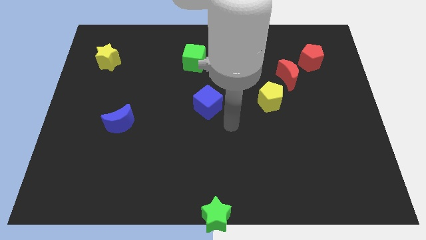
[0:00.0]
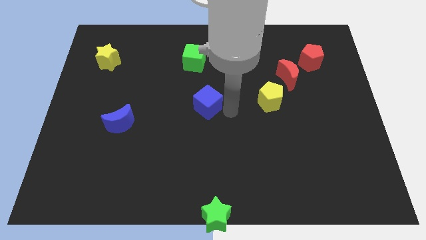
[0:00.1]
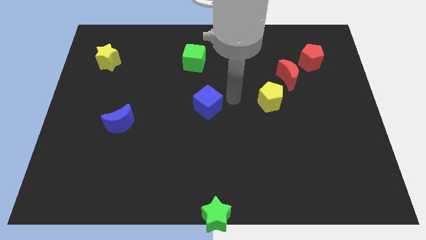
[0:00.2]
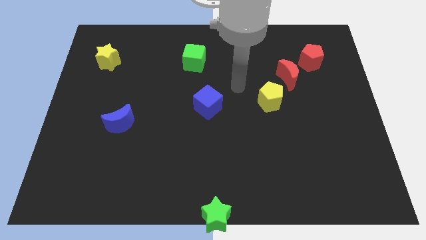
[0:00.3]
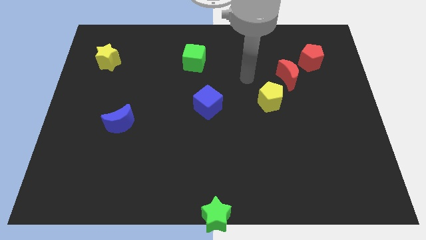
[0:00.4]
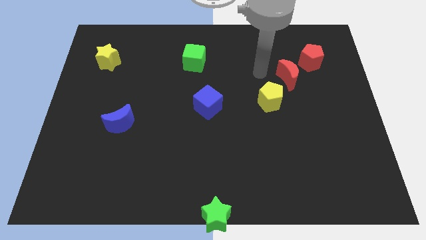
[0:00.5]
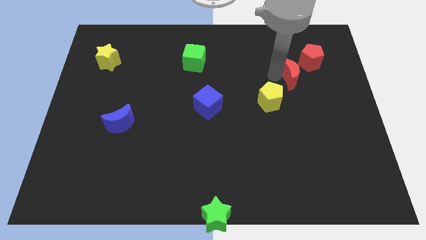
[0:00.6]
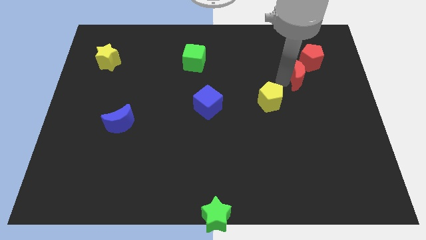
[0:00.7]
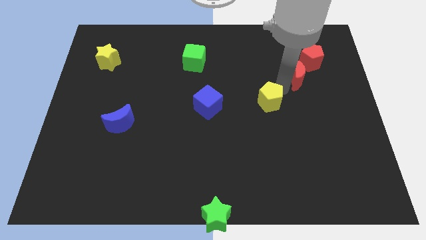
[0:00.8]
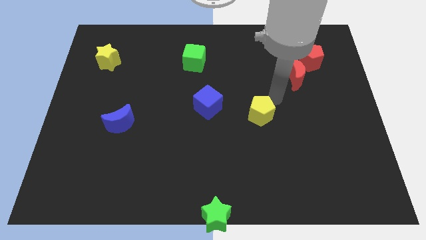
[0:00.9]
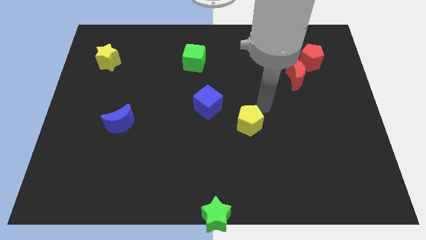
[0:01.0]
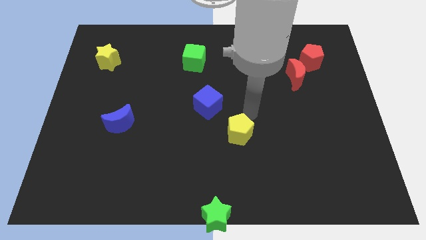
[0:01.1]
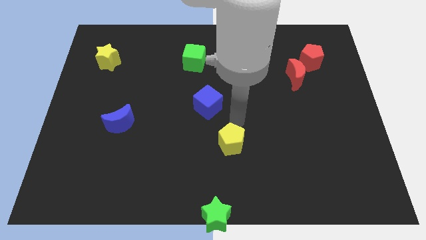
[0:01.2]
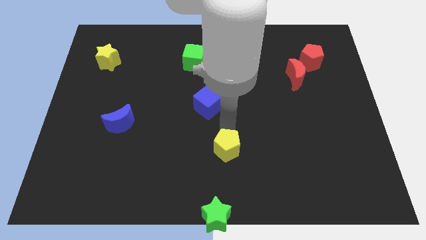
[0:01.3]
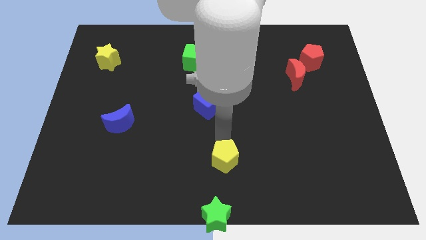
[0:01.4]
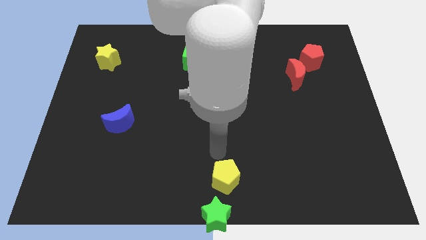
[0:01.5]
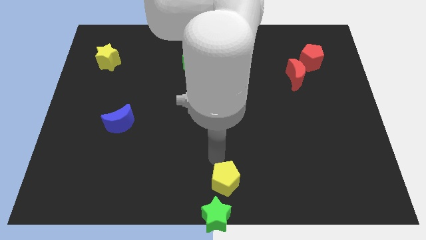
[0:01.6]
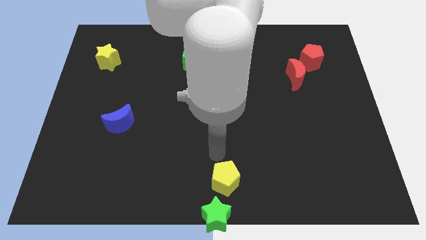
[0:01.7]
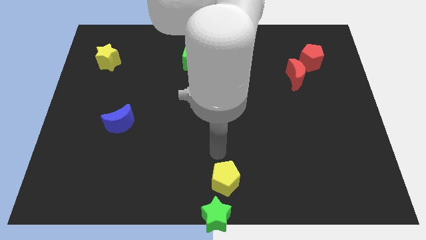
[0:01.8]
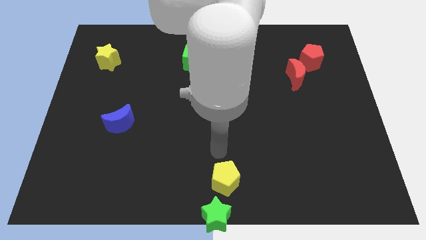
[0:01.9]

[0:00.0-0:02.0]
place the yellow pentagon on top of the green star

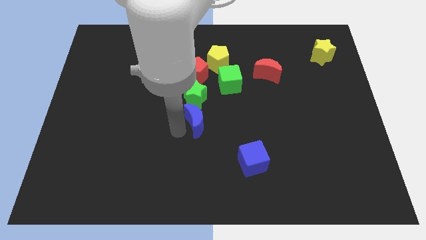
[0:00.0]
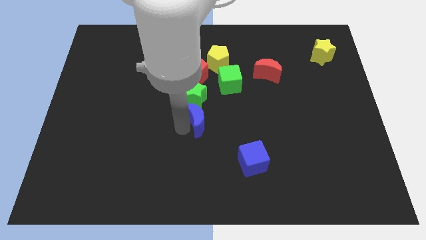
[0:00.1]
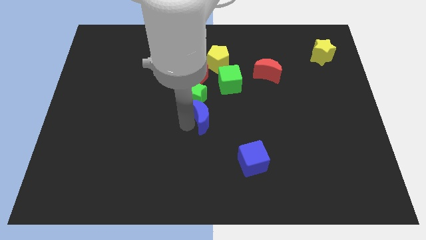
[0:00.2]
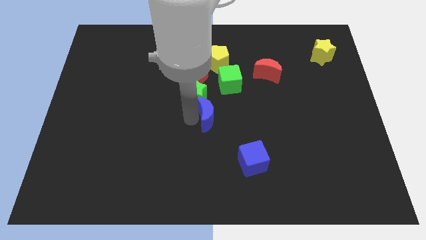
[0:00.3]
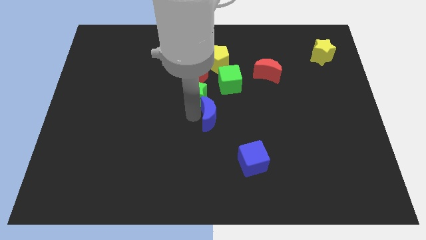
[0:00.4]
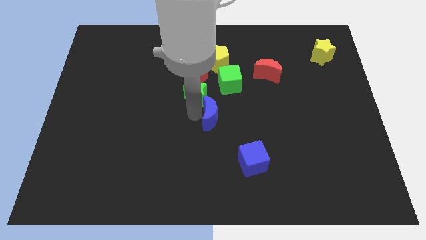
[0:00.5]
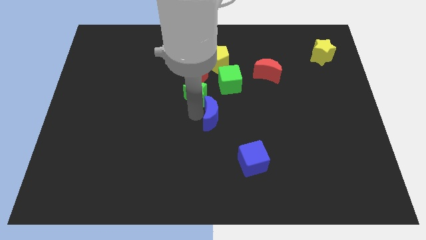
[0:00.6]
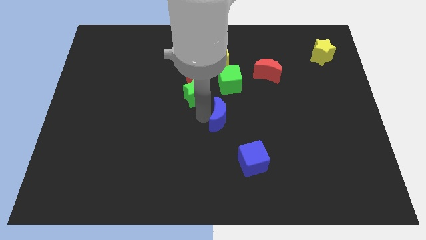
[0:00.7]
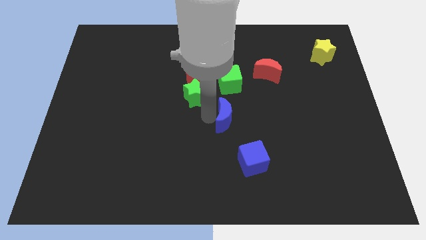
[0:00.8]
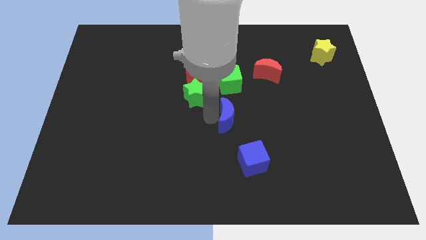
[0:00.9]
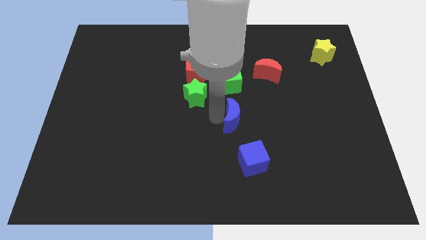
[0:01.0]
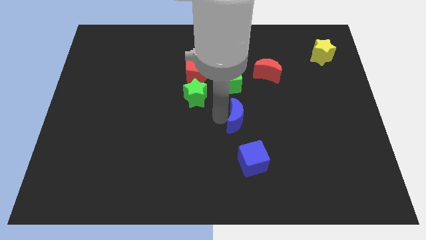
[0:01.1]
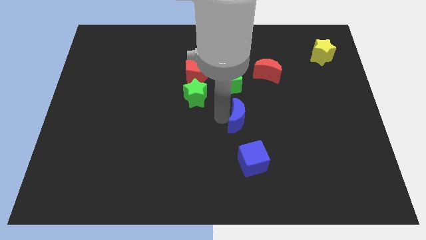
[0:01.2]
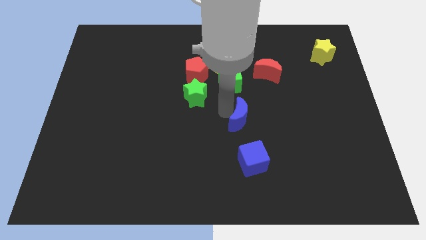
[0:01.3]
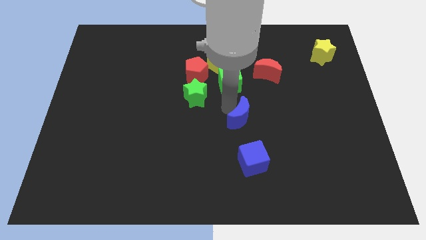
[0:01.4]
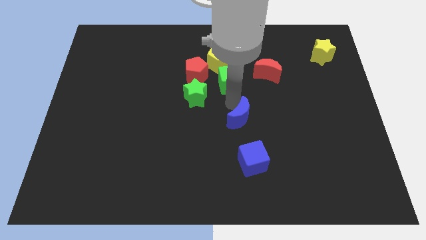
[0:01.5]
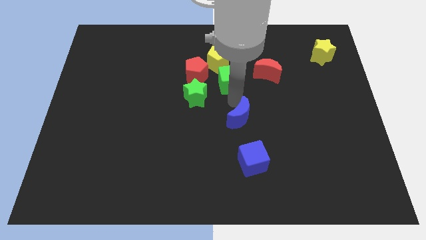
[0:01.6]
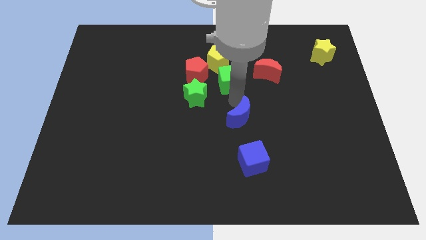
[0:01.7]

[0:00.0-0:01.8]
put the blue moon in between the green cube and blue cube

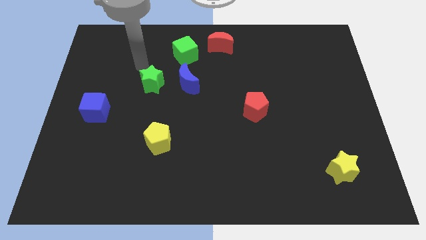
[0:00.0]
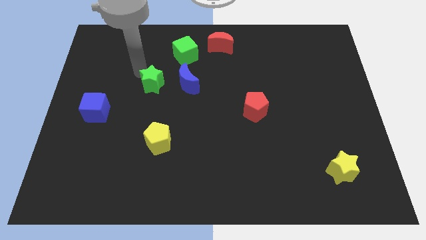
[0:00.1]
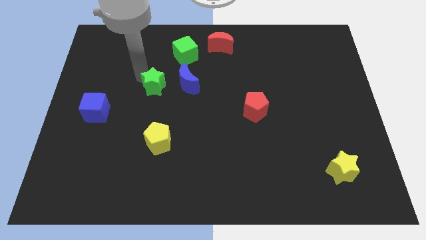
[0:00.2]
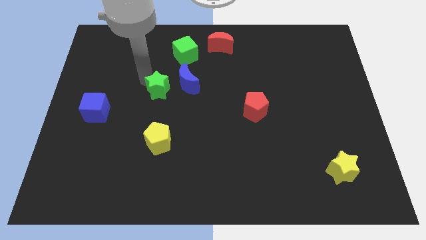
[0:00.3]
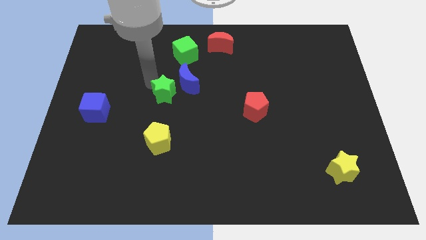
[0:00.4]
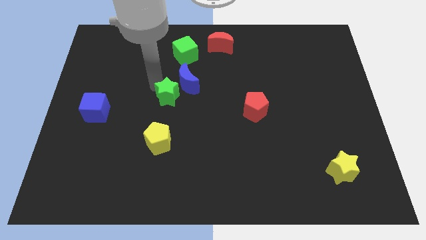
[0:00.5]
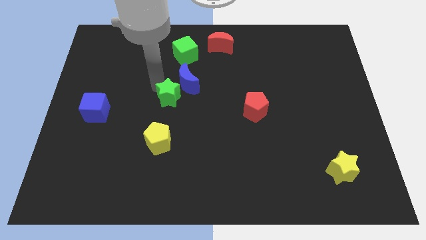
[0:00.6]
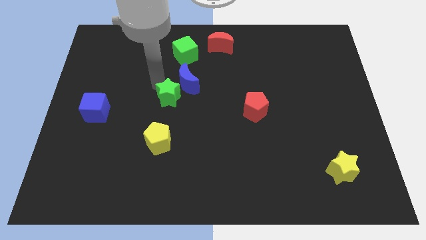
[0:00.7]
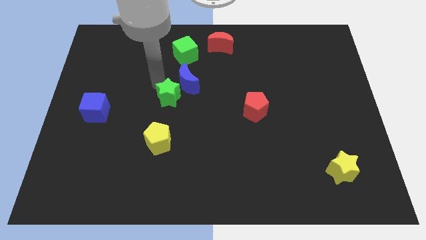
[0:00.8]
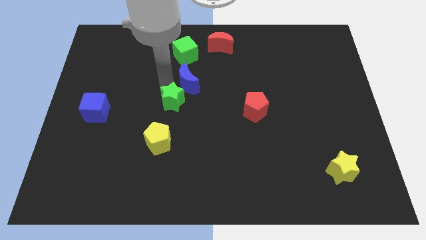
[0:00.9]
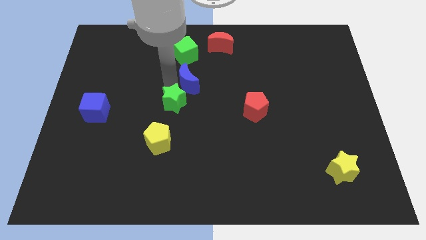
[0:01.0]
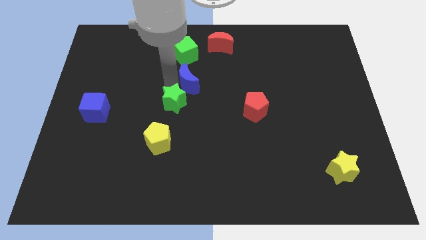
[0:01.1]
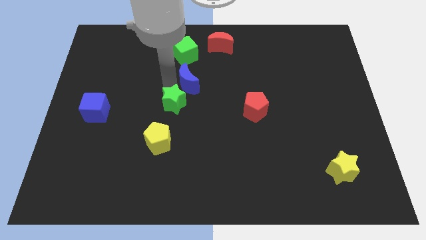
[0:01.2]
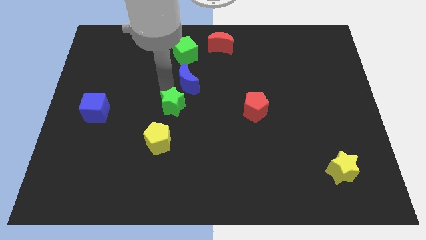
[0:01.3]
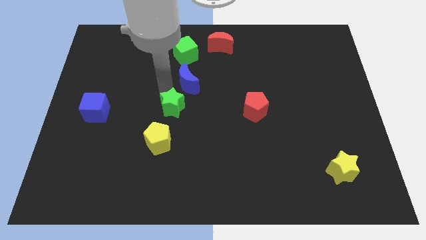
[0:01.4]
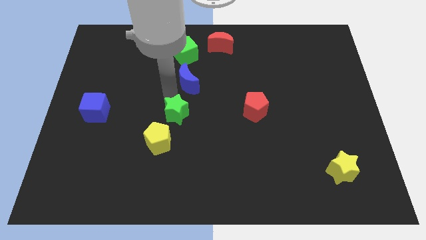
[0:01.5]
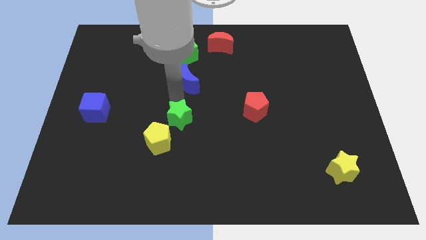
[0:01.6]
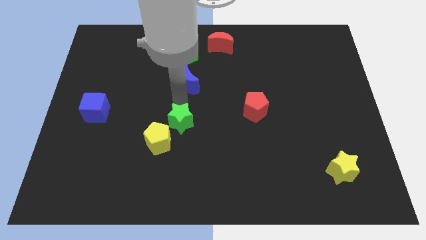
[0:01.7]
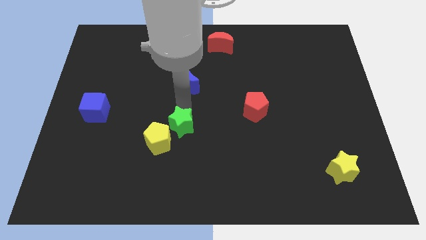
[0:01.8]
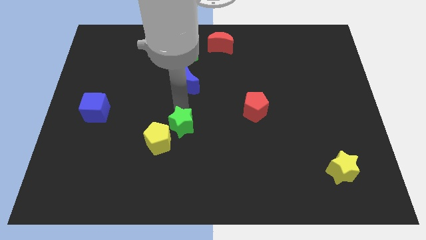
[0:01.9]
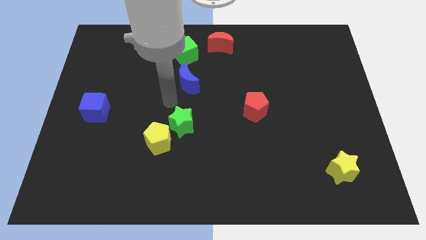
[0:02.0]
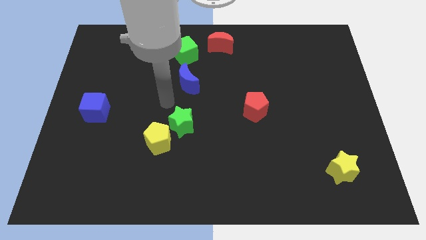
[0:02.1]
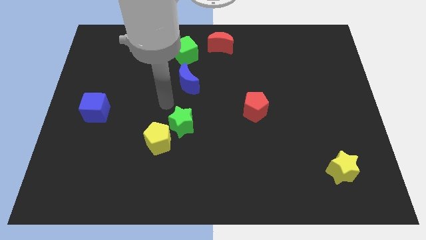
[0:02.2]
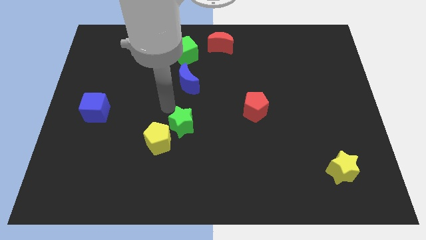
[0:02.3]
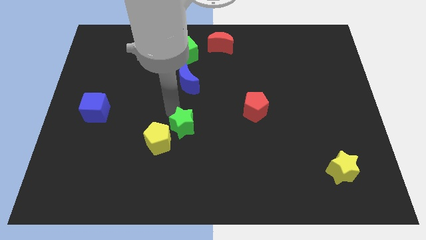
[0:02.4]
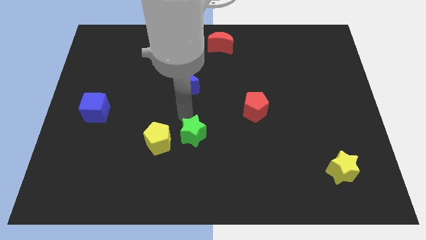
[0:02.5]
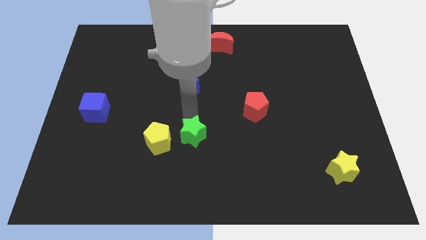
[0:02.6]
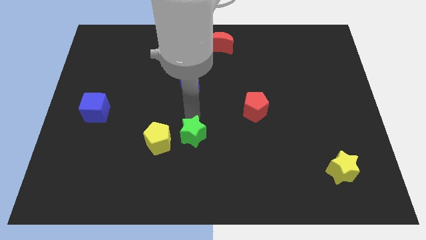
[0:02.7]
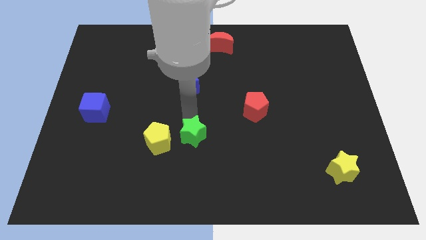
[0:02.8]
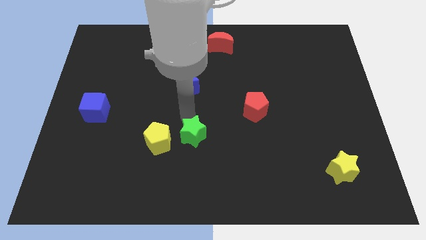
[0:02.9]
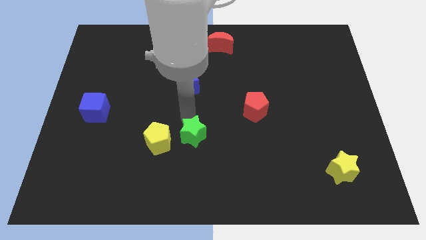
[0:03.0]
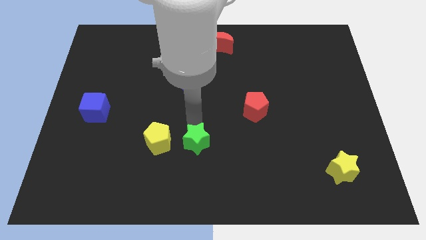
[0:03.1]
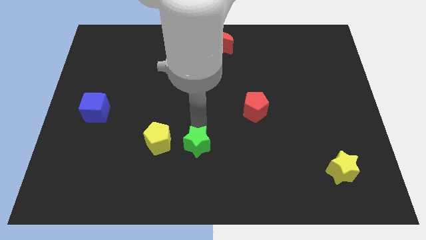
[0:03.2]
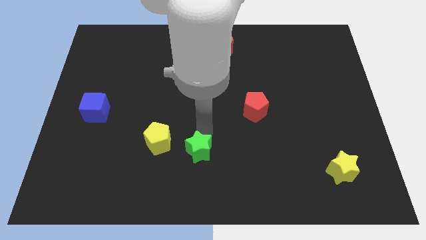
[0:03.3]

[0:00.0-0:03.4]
push the green star to the bottom right to the yellow pentagon

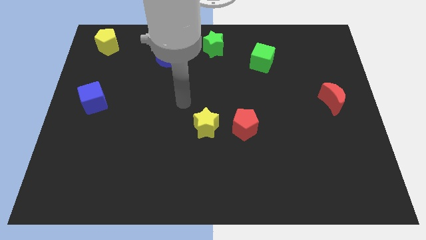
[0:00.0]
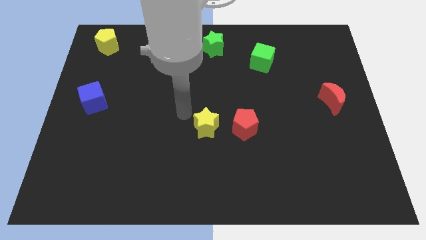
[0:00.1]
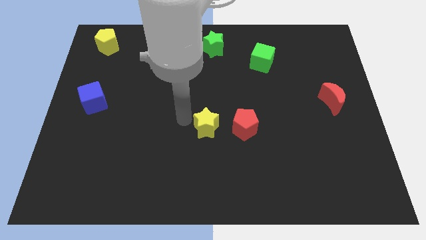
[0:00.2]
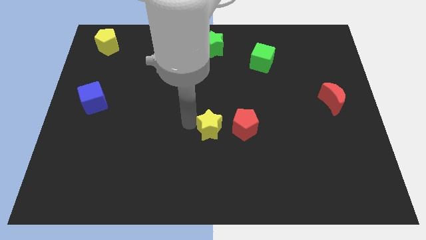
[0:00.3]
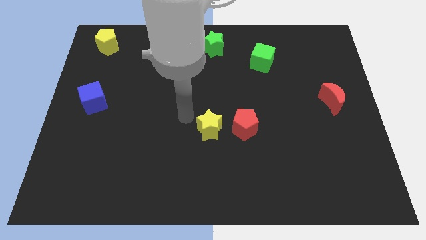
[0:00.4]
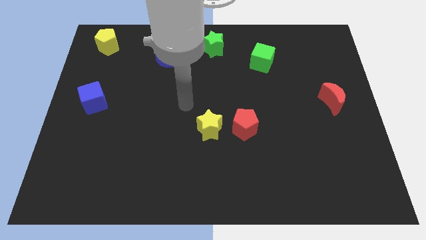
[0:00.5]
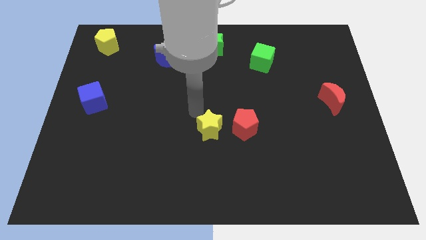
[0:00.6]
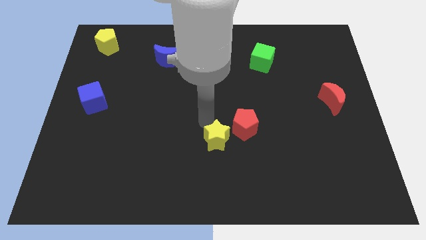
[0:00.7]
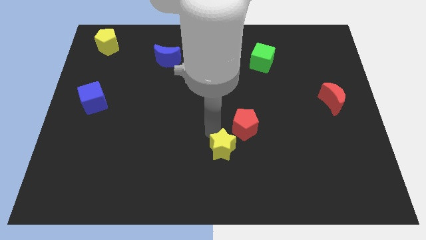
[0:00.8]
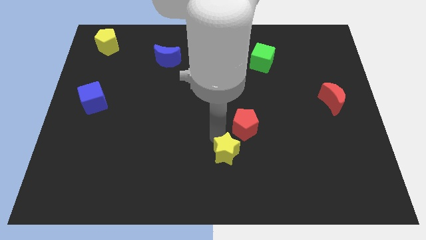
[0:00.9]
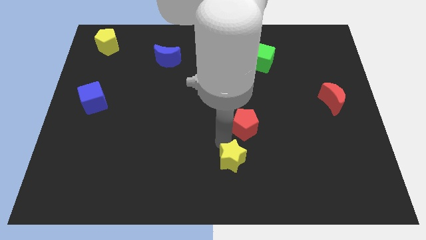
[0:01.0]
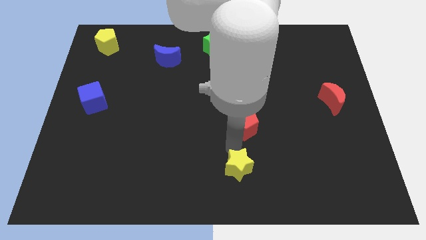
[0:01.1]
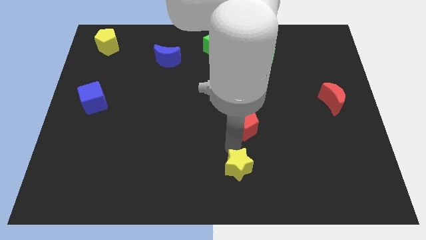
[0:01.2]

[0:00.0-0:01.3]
slide the yellow star to the bottom side of the red pentagon

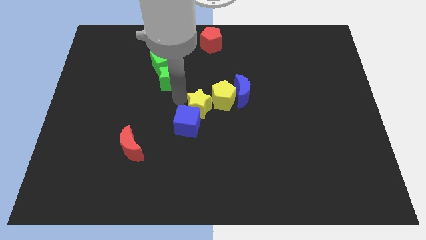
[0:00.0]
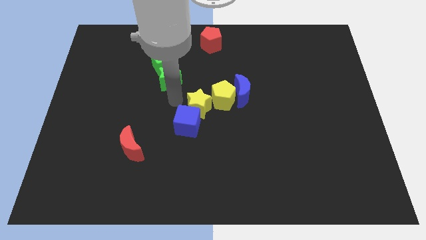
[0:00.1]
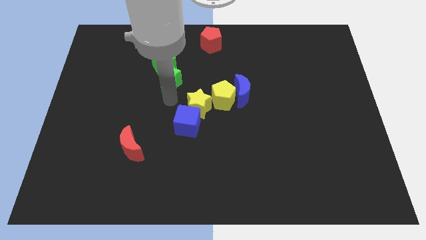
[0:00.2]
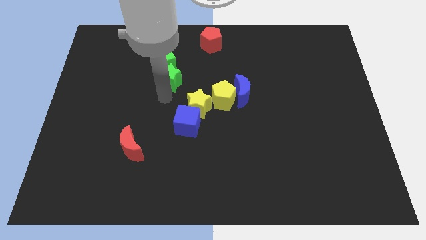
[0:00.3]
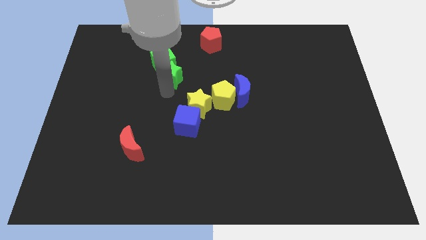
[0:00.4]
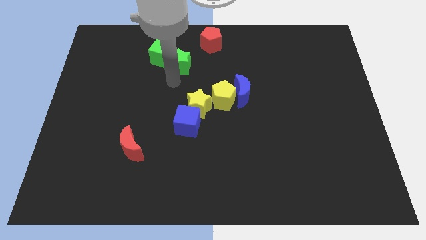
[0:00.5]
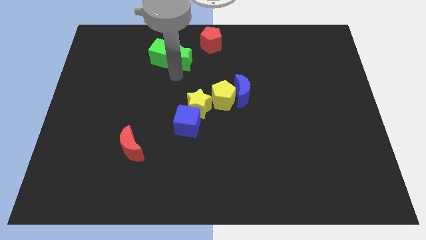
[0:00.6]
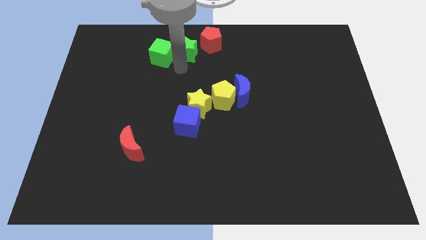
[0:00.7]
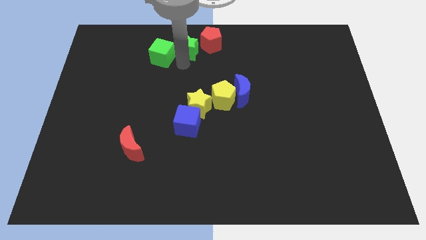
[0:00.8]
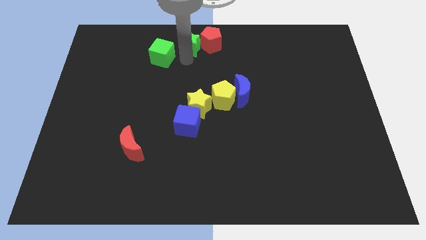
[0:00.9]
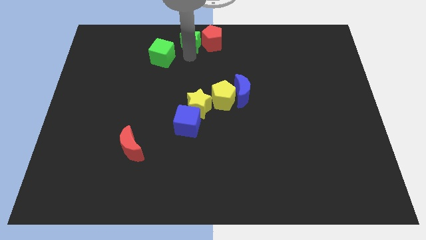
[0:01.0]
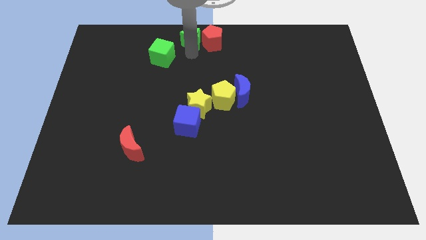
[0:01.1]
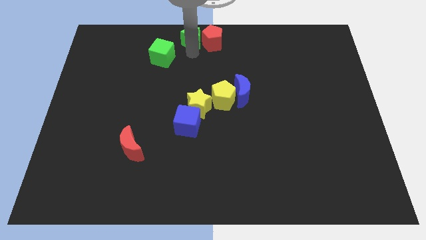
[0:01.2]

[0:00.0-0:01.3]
place the green star to the left side of the red pentagon
